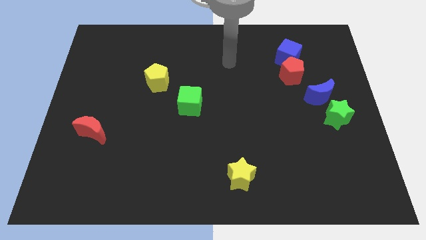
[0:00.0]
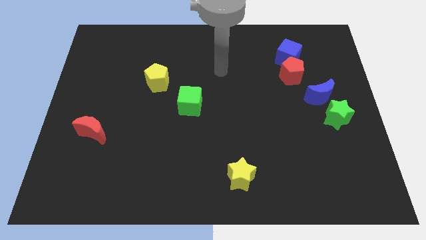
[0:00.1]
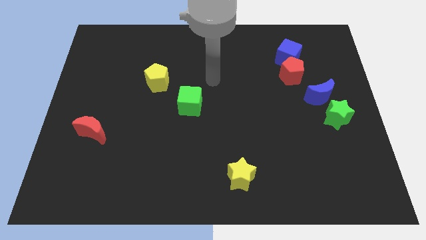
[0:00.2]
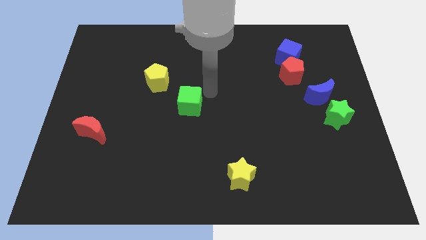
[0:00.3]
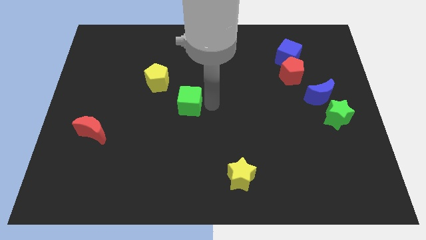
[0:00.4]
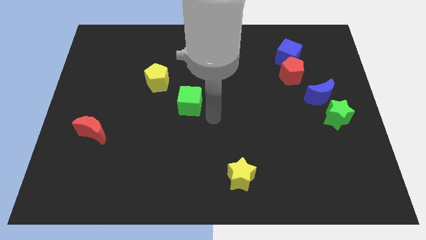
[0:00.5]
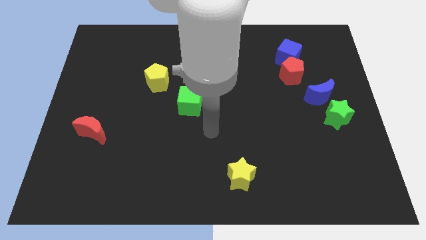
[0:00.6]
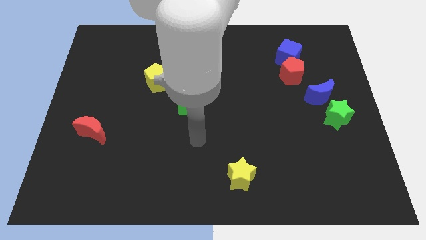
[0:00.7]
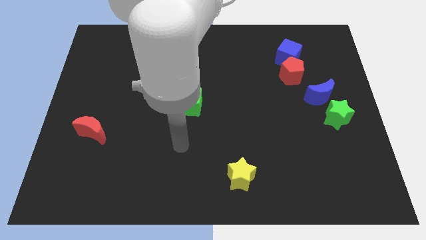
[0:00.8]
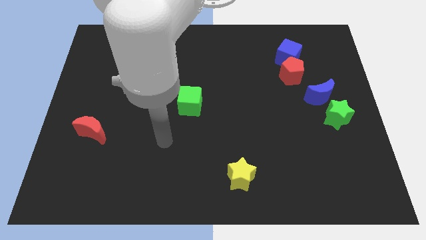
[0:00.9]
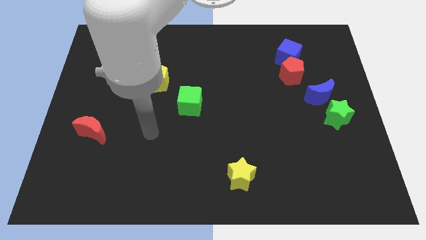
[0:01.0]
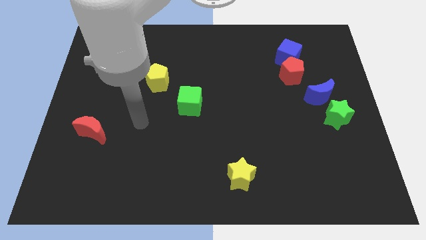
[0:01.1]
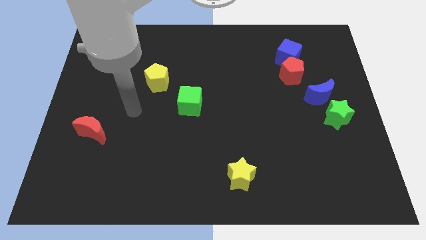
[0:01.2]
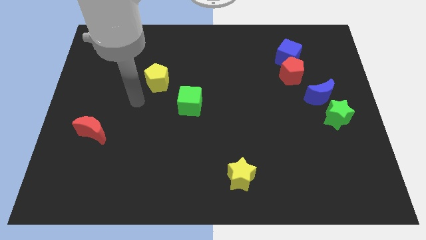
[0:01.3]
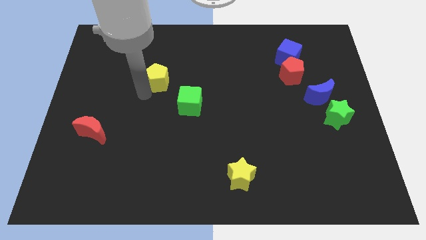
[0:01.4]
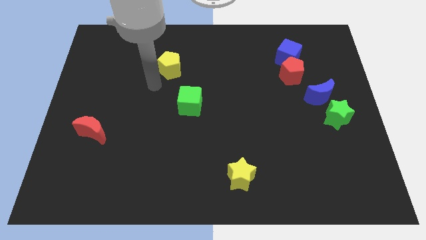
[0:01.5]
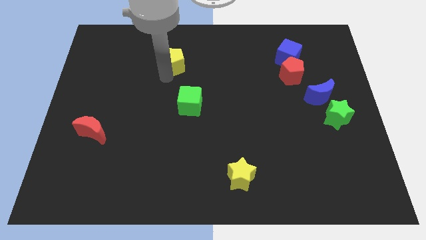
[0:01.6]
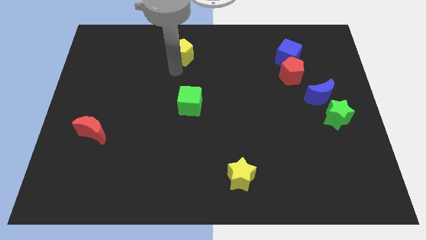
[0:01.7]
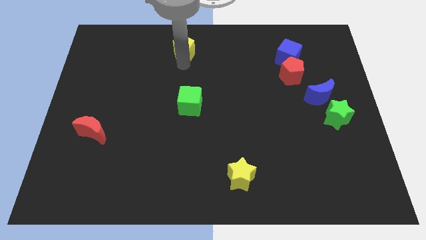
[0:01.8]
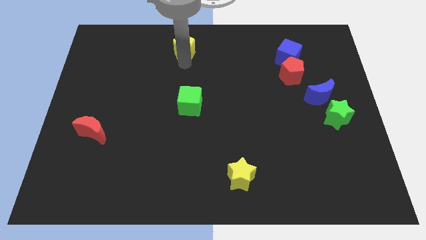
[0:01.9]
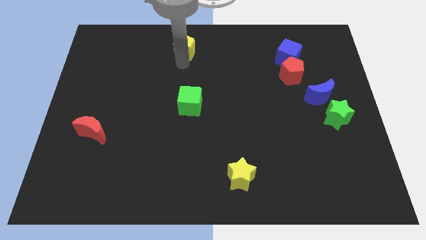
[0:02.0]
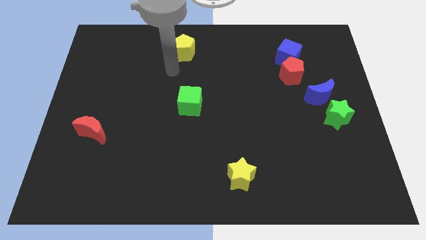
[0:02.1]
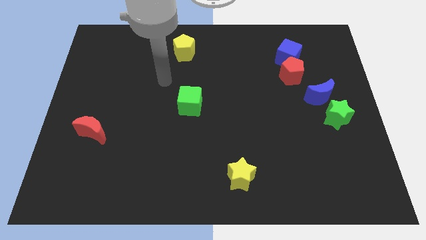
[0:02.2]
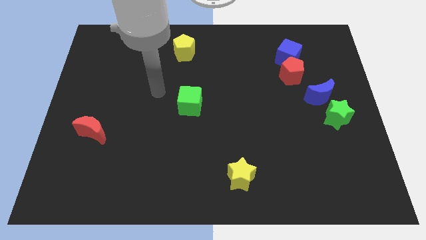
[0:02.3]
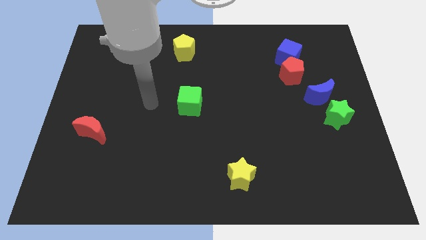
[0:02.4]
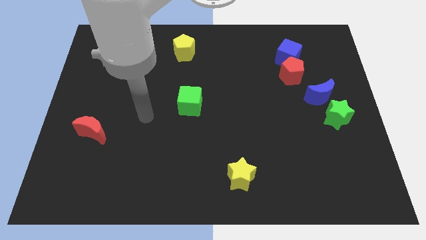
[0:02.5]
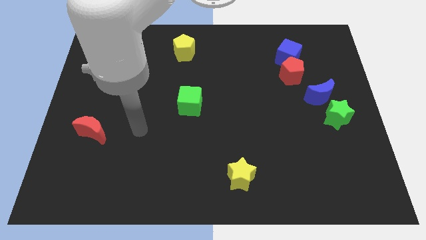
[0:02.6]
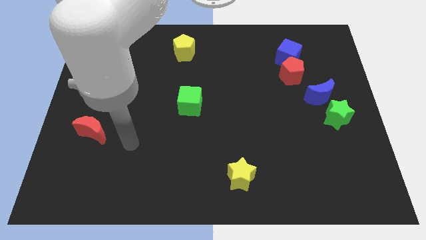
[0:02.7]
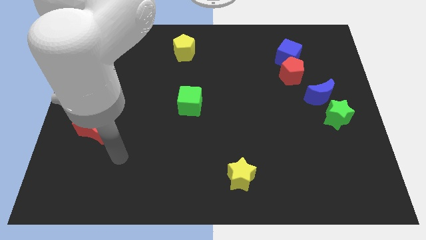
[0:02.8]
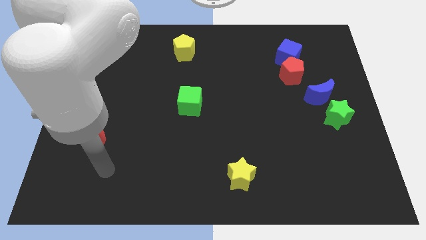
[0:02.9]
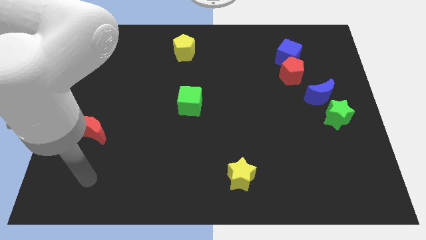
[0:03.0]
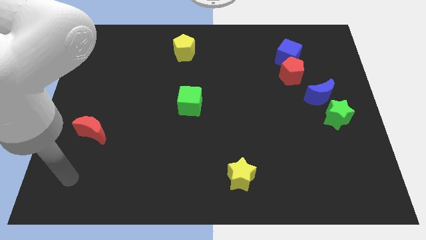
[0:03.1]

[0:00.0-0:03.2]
move the yellow pentagon towards top center

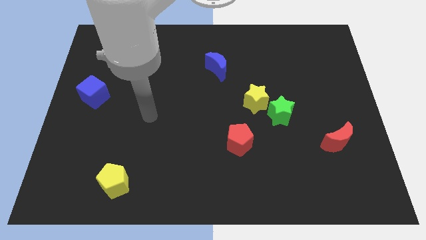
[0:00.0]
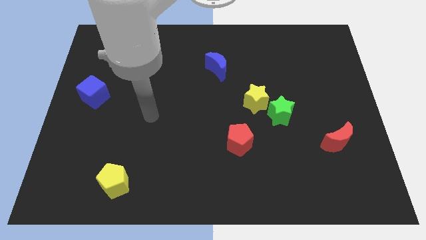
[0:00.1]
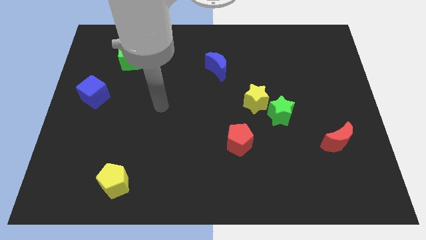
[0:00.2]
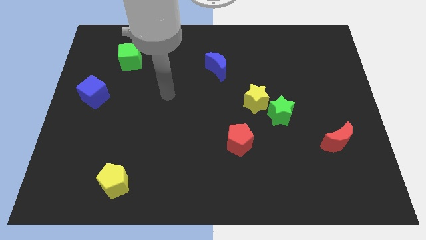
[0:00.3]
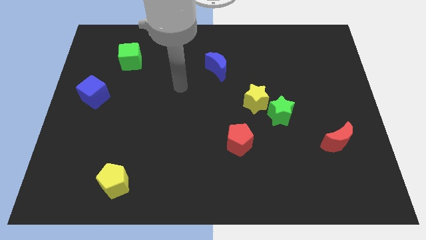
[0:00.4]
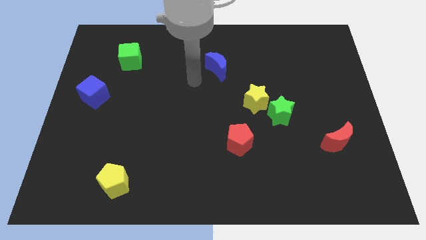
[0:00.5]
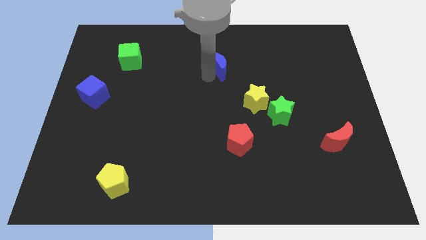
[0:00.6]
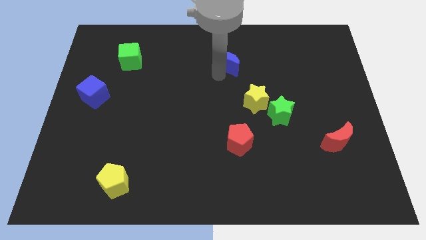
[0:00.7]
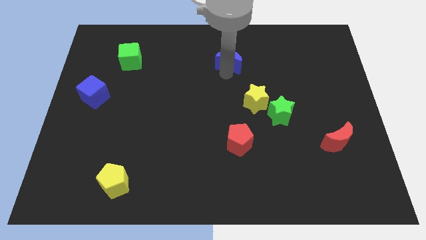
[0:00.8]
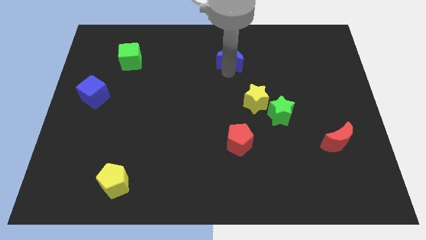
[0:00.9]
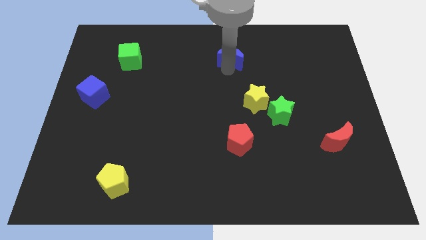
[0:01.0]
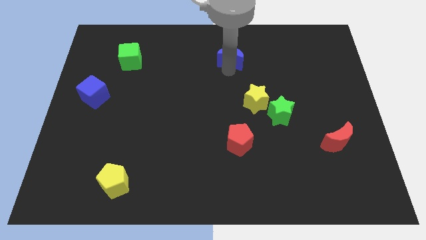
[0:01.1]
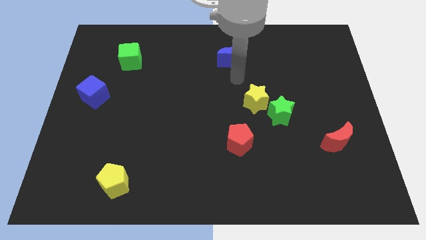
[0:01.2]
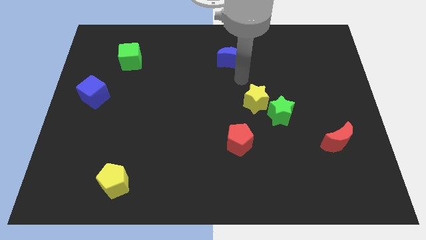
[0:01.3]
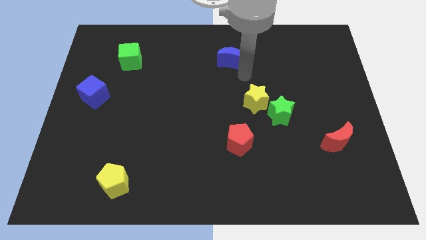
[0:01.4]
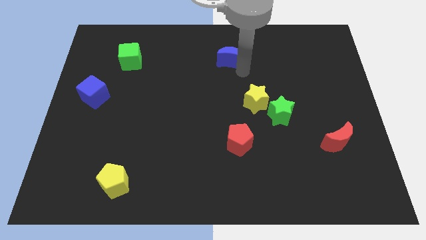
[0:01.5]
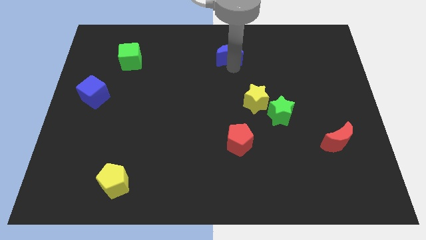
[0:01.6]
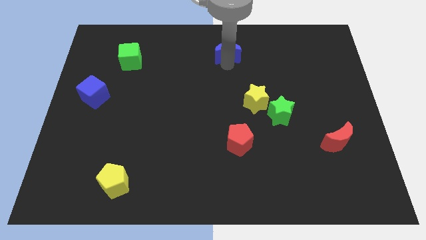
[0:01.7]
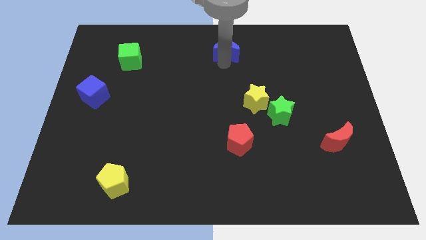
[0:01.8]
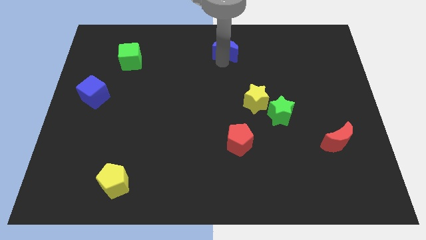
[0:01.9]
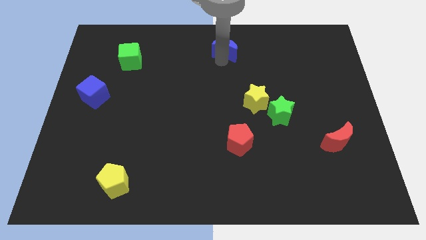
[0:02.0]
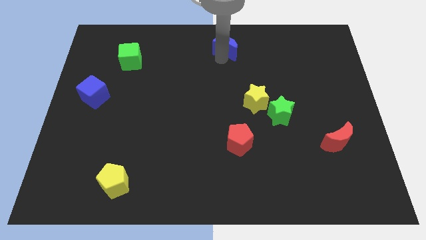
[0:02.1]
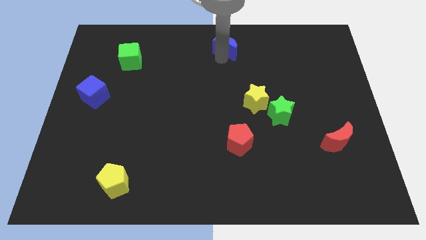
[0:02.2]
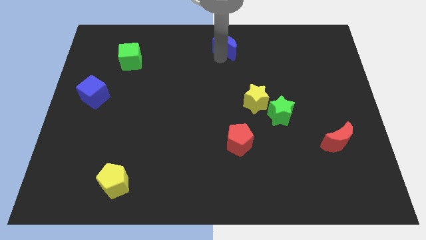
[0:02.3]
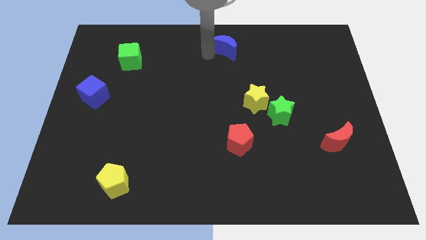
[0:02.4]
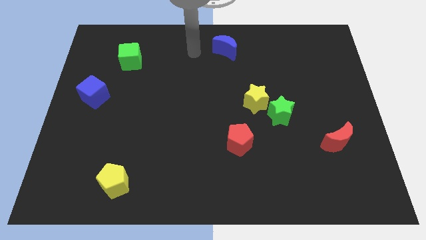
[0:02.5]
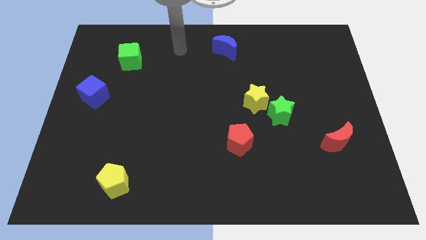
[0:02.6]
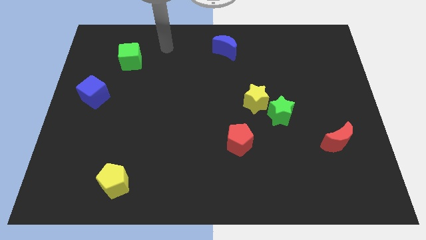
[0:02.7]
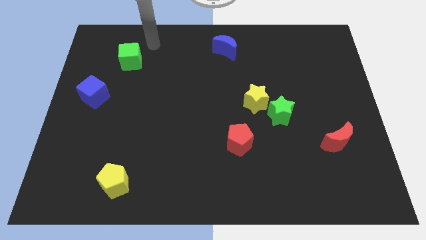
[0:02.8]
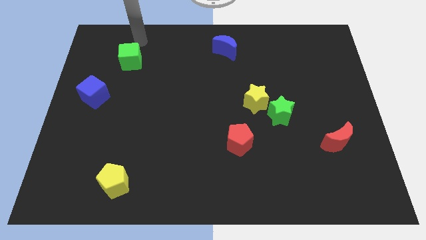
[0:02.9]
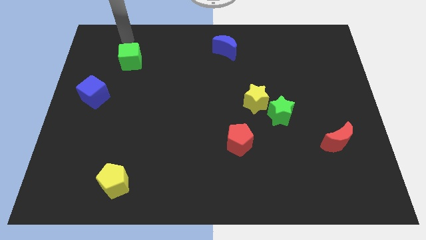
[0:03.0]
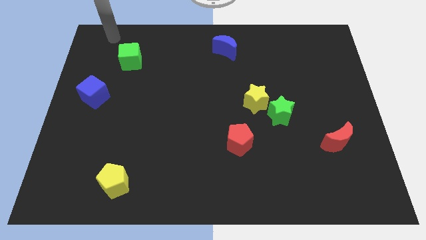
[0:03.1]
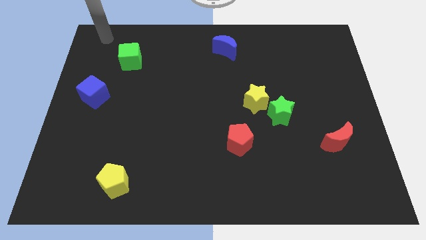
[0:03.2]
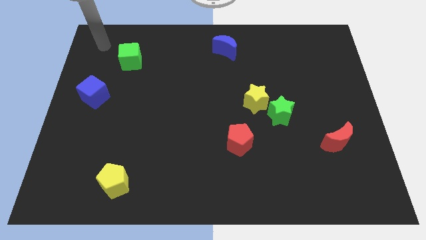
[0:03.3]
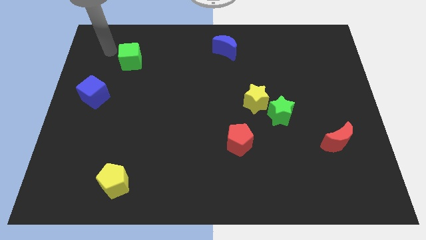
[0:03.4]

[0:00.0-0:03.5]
push blue moon slightly upwards to the top side of the board

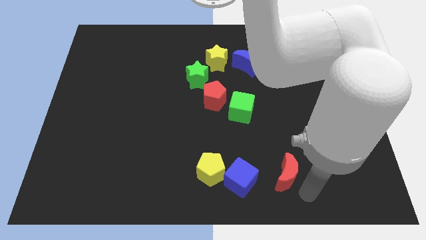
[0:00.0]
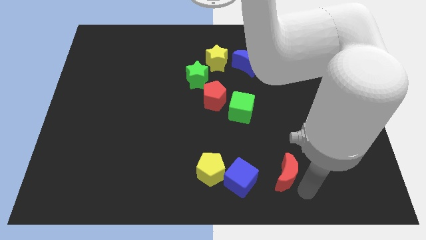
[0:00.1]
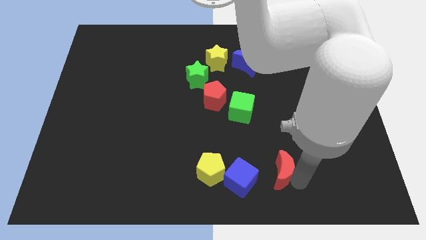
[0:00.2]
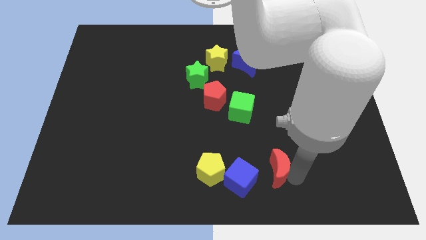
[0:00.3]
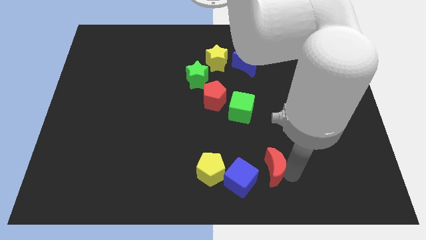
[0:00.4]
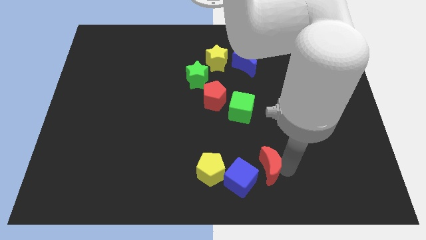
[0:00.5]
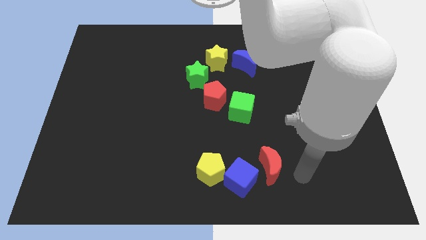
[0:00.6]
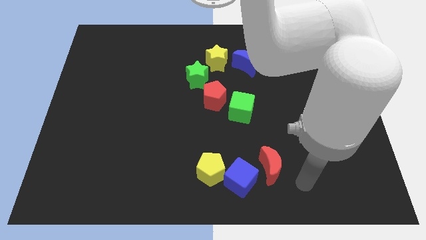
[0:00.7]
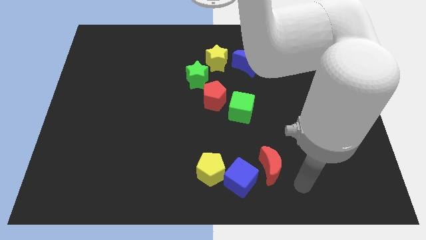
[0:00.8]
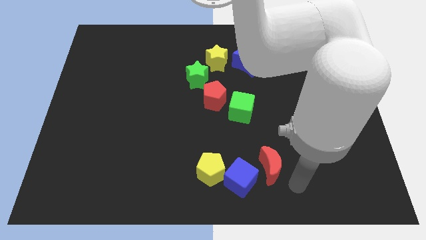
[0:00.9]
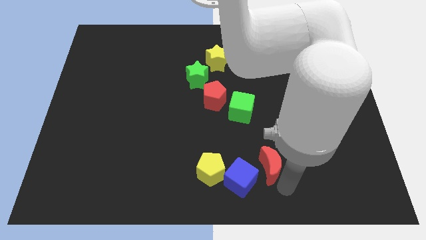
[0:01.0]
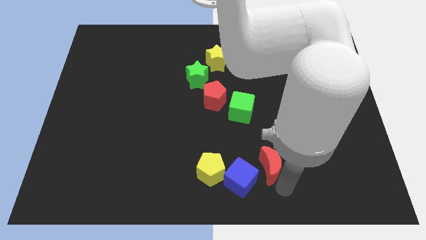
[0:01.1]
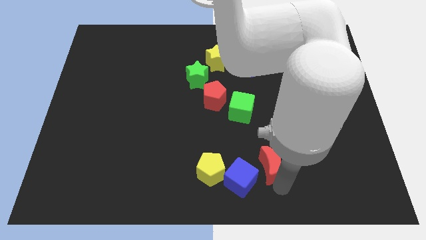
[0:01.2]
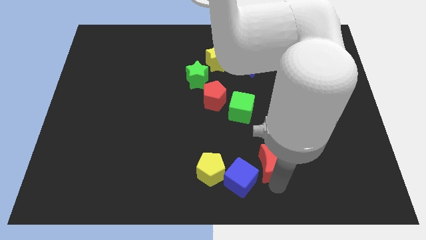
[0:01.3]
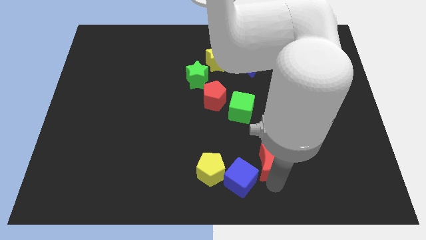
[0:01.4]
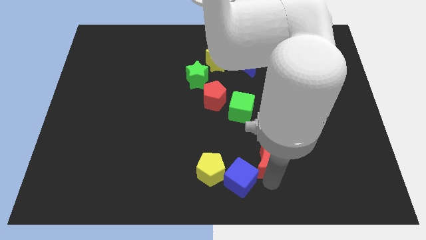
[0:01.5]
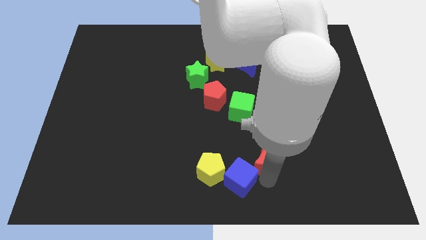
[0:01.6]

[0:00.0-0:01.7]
move red moon close to blue cube

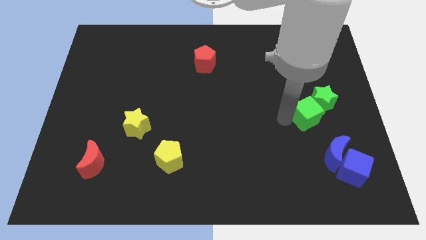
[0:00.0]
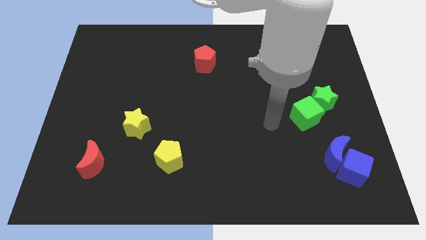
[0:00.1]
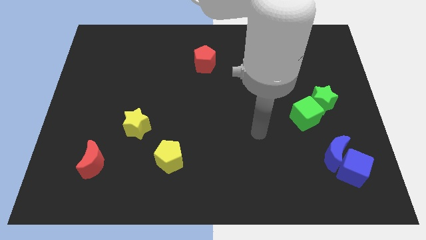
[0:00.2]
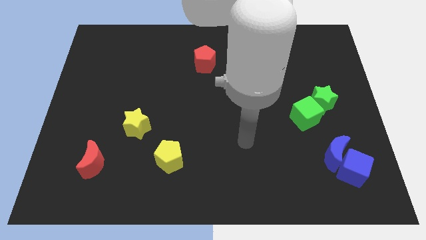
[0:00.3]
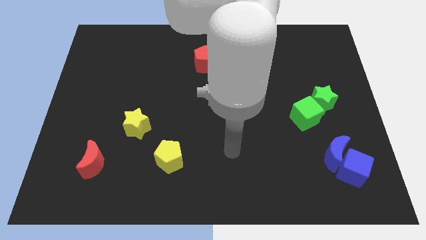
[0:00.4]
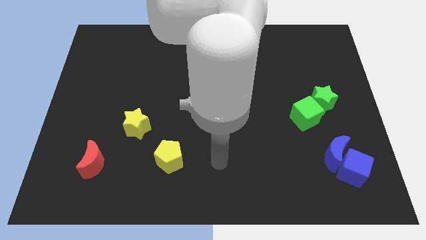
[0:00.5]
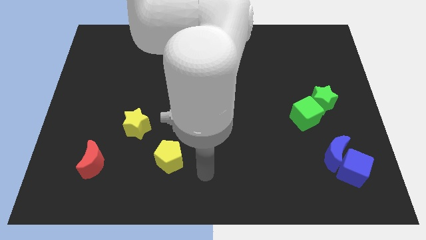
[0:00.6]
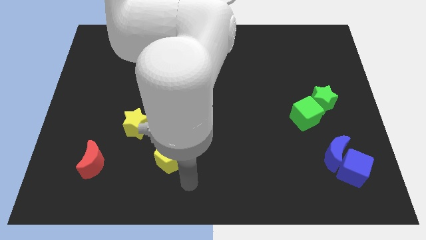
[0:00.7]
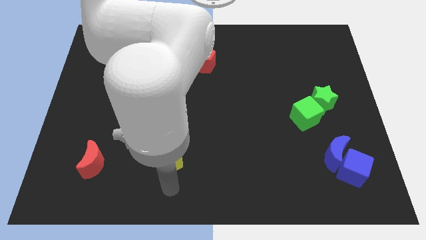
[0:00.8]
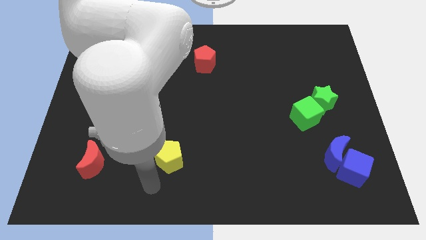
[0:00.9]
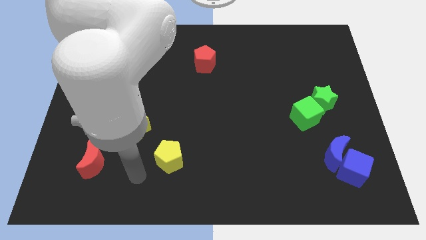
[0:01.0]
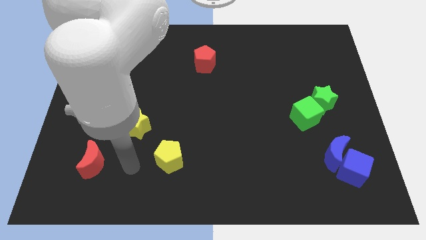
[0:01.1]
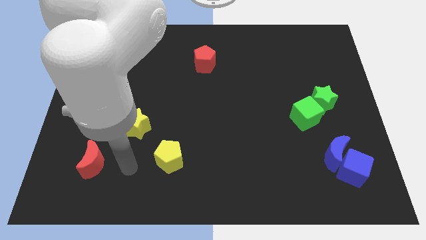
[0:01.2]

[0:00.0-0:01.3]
place your arm right to the red crescent
